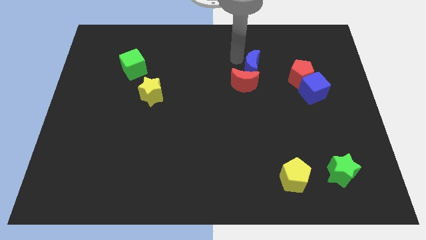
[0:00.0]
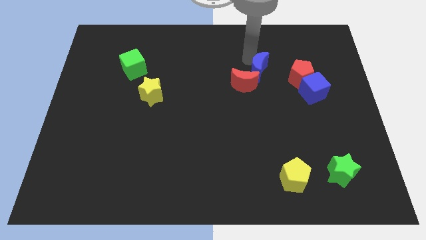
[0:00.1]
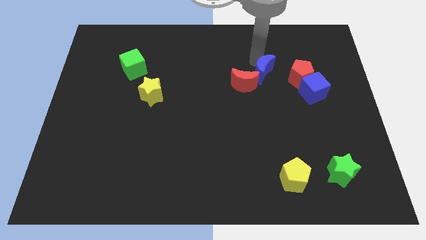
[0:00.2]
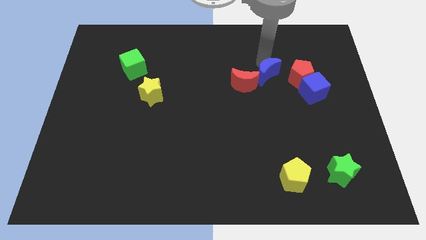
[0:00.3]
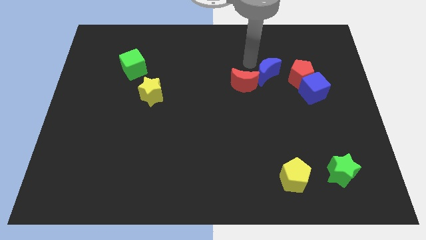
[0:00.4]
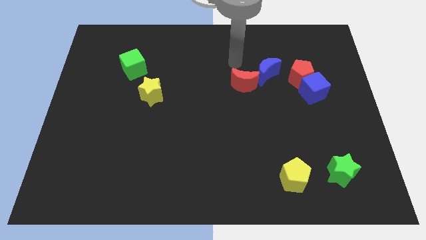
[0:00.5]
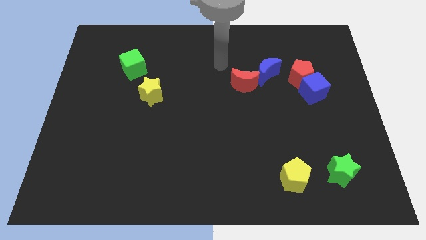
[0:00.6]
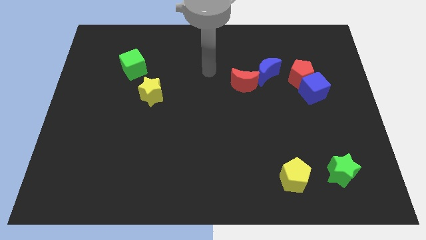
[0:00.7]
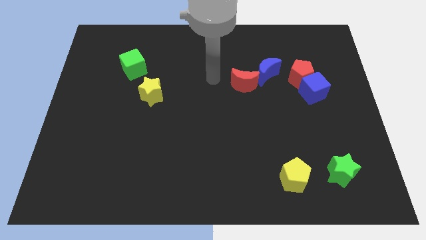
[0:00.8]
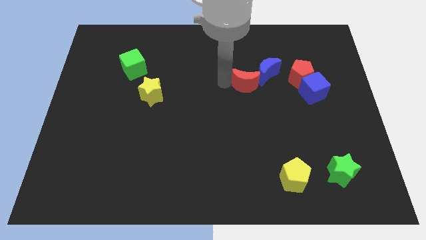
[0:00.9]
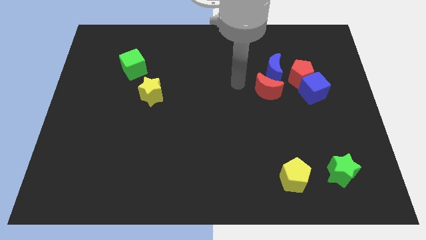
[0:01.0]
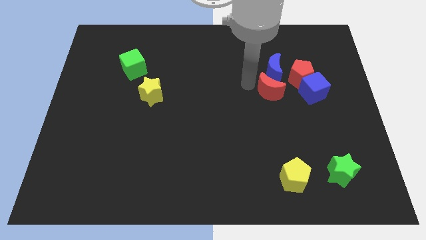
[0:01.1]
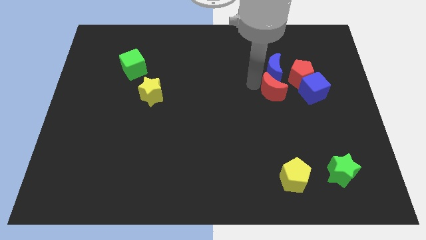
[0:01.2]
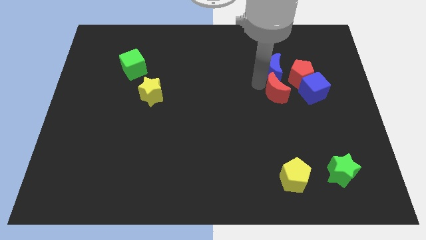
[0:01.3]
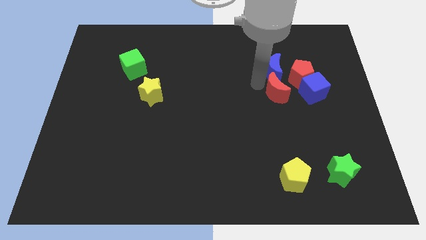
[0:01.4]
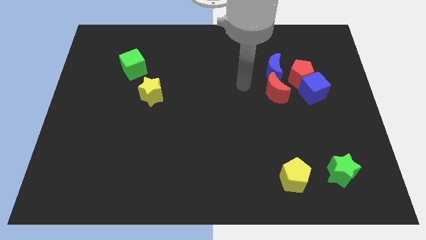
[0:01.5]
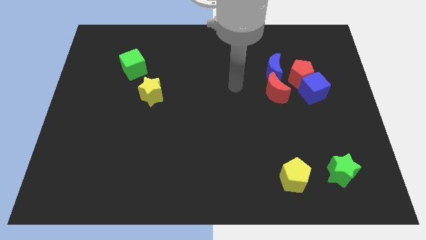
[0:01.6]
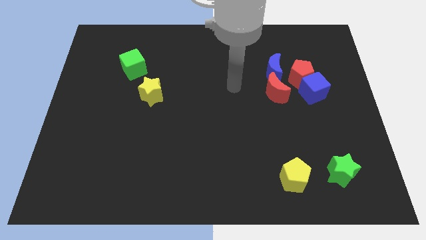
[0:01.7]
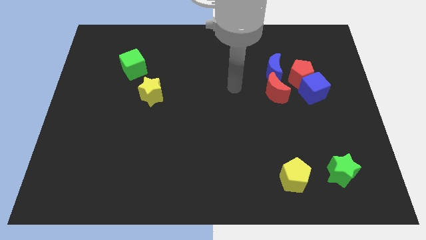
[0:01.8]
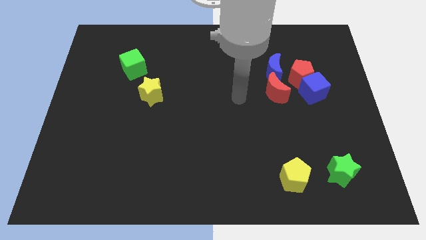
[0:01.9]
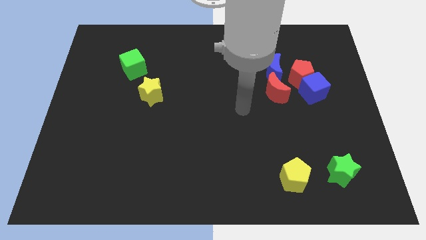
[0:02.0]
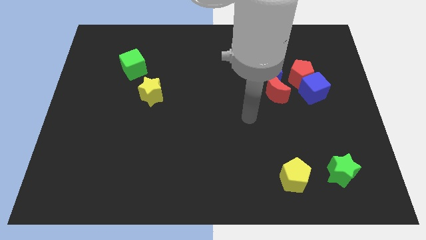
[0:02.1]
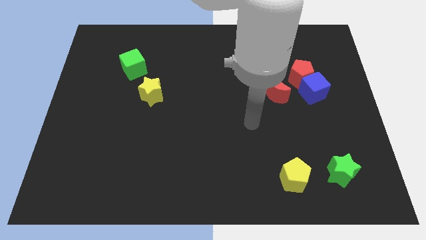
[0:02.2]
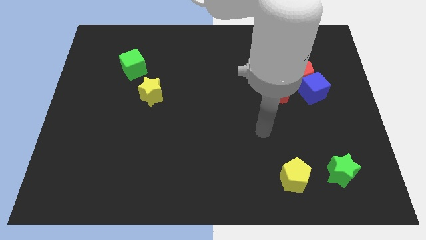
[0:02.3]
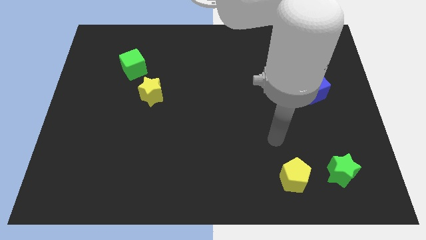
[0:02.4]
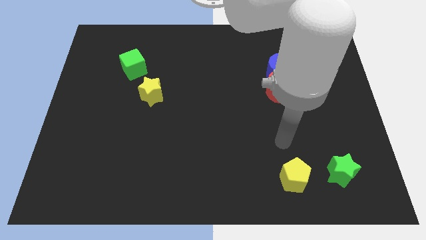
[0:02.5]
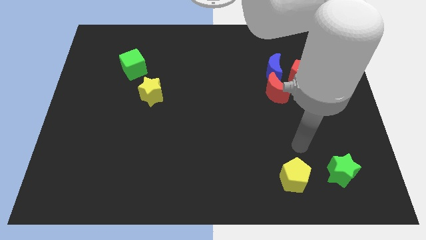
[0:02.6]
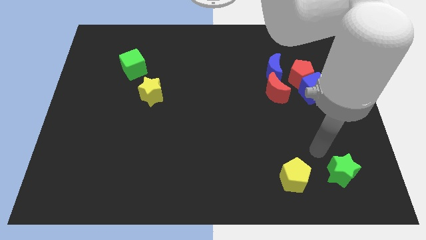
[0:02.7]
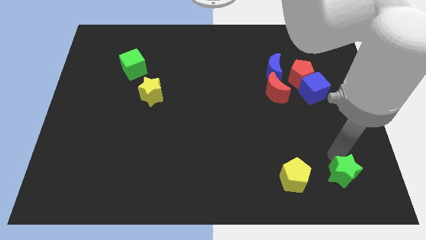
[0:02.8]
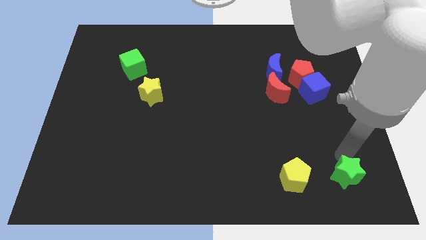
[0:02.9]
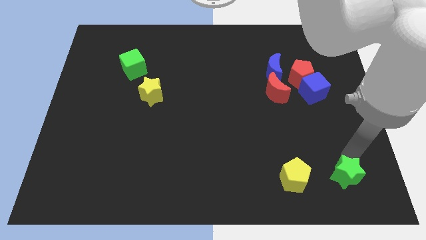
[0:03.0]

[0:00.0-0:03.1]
place the red moon and blue moon horizontal to the blue cube

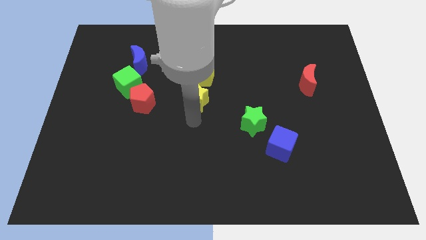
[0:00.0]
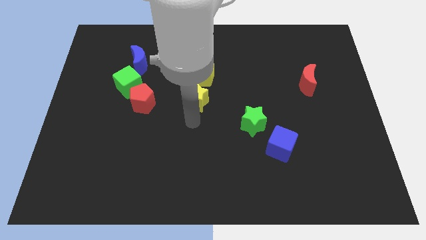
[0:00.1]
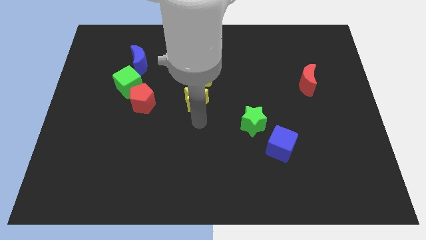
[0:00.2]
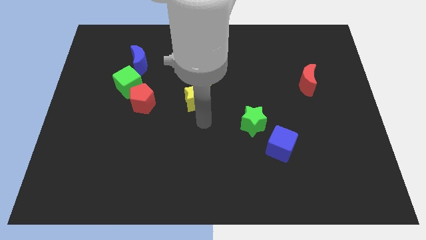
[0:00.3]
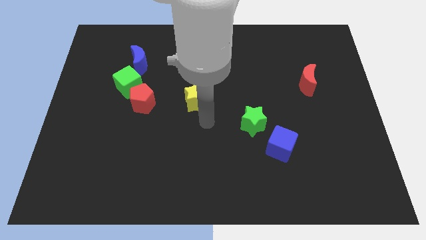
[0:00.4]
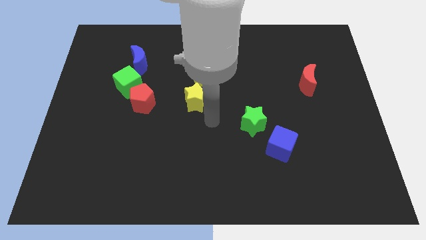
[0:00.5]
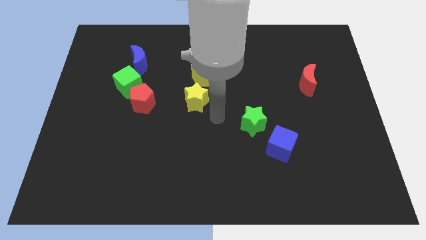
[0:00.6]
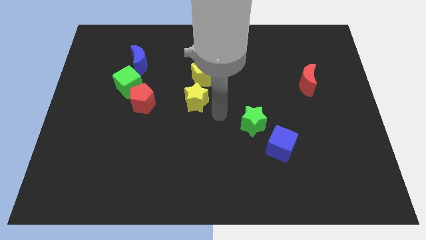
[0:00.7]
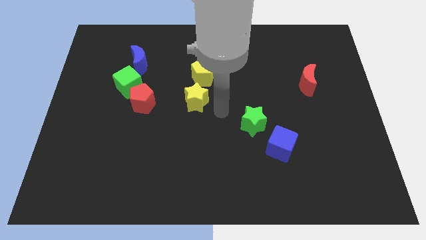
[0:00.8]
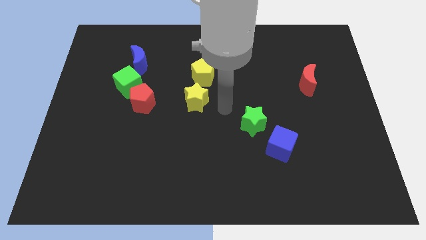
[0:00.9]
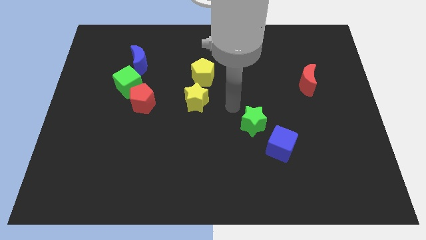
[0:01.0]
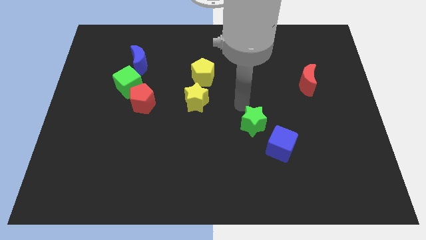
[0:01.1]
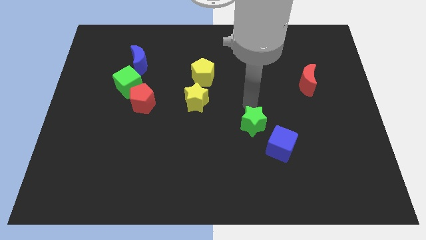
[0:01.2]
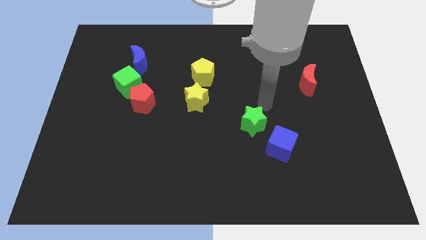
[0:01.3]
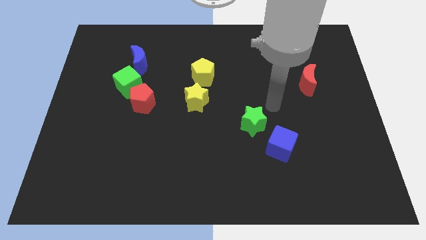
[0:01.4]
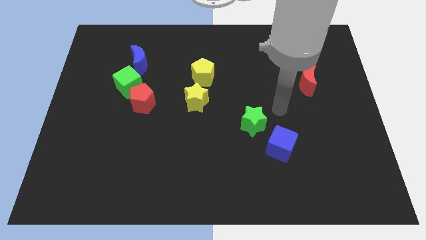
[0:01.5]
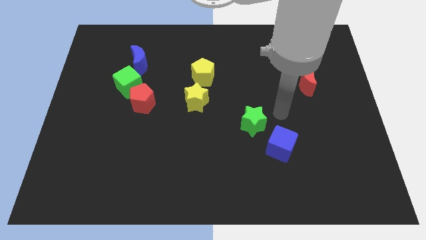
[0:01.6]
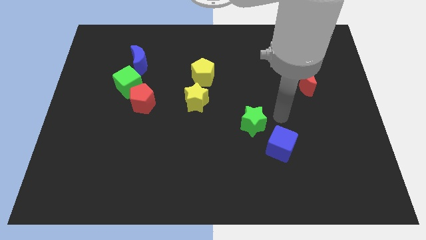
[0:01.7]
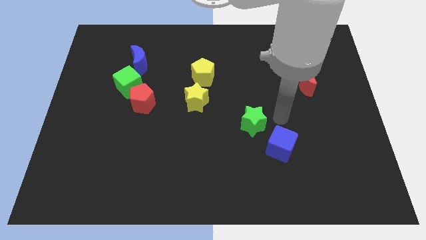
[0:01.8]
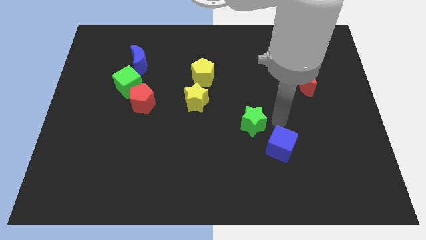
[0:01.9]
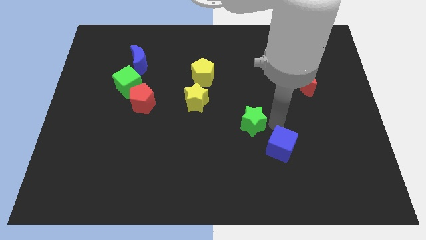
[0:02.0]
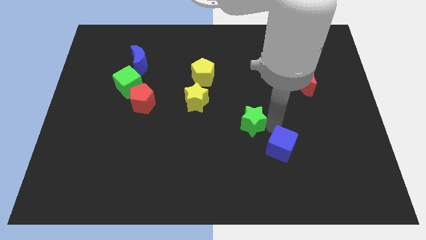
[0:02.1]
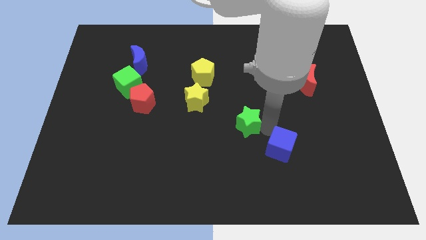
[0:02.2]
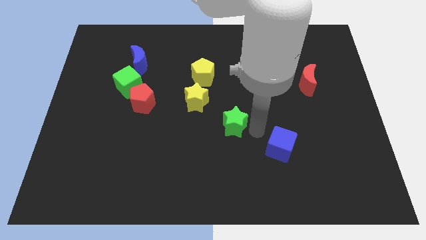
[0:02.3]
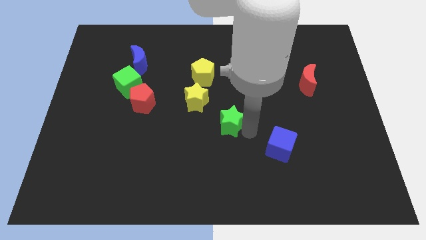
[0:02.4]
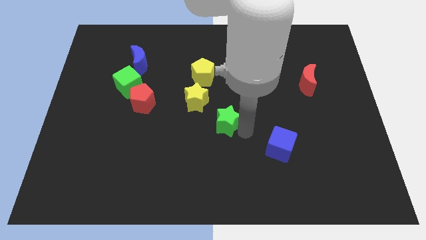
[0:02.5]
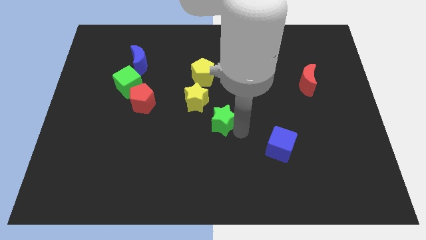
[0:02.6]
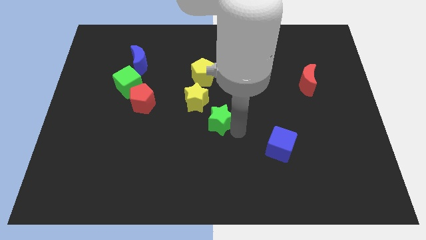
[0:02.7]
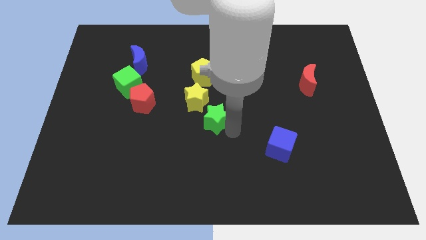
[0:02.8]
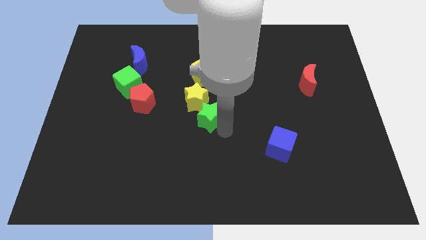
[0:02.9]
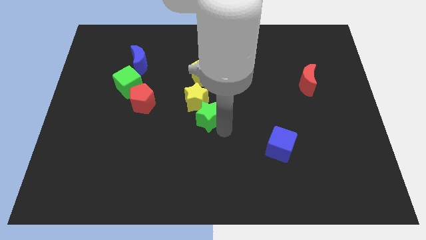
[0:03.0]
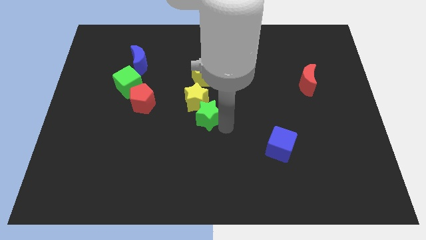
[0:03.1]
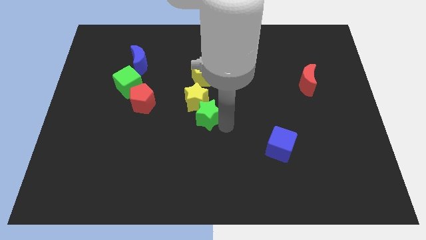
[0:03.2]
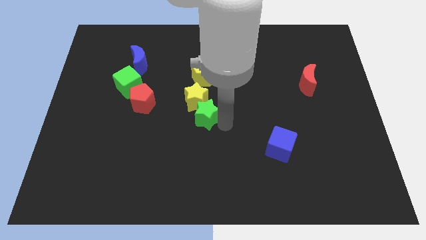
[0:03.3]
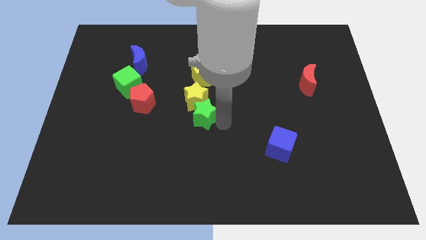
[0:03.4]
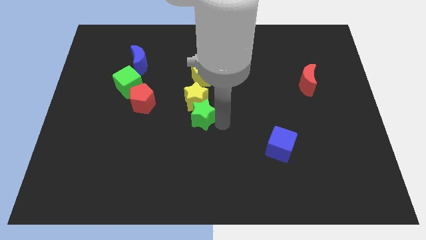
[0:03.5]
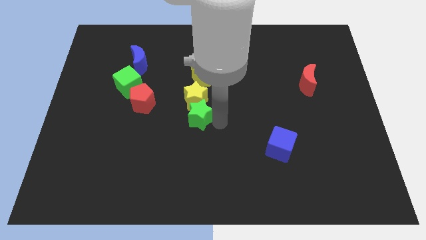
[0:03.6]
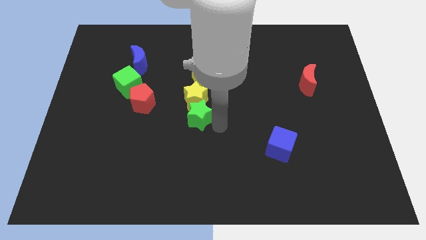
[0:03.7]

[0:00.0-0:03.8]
move the green star to the bottom of the yellow star

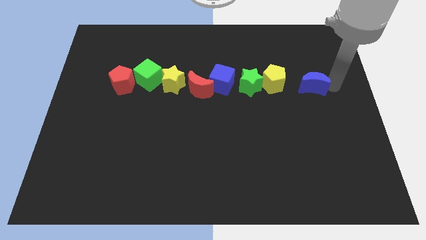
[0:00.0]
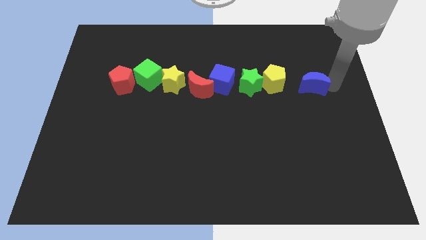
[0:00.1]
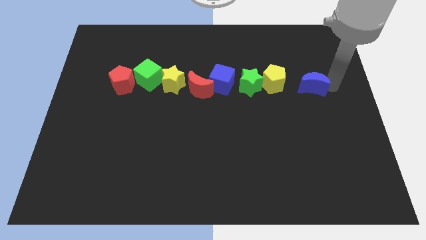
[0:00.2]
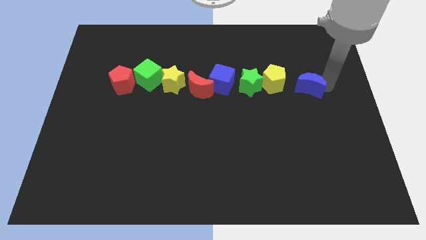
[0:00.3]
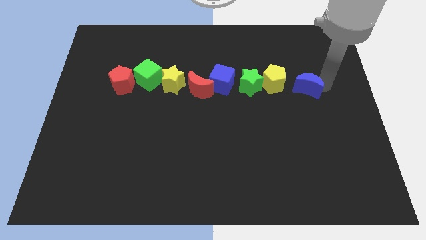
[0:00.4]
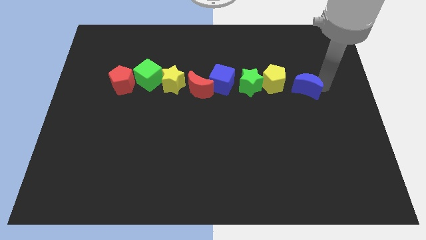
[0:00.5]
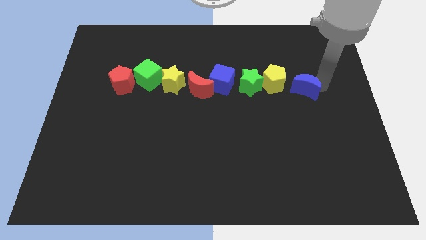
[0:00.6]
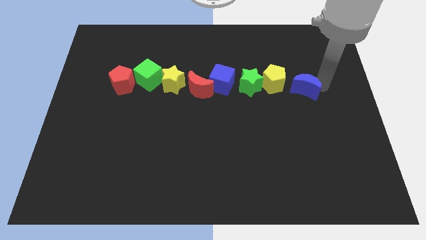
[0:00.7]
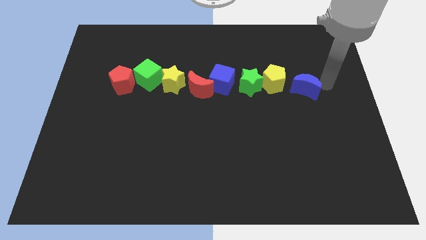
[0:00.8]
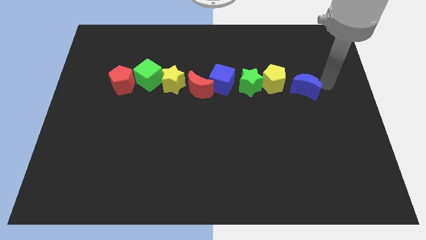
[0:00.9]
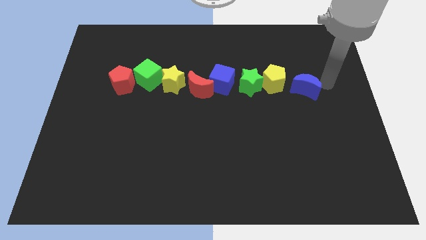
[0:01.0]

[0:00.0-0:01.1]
adjust the blue moon to form a horizontal line

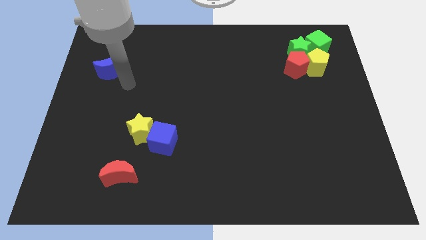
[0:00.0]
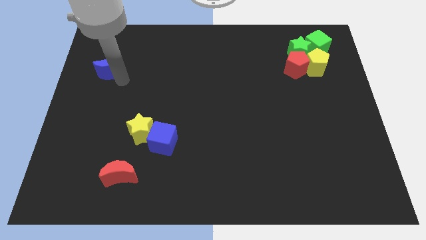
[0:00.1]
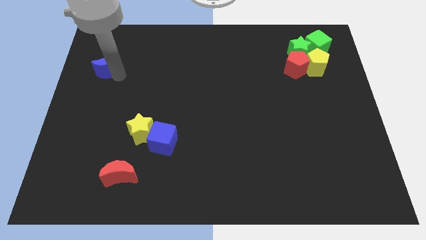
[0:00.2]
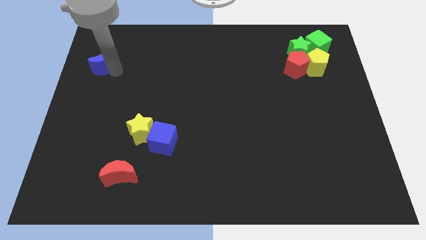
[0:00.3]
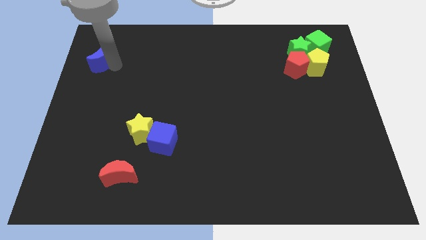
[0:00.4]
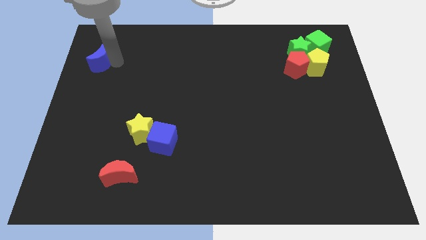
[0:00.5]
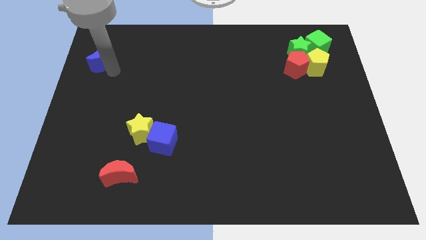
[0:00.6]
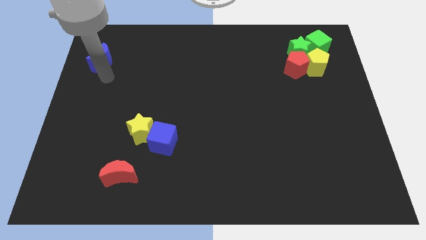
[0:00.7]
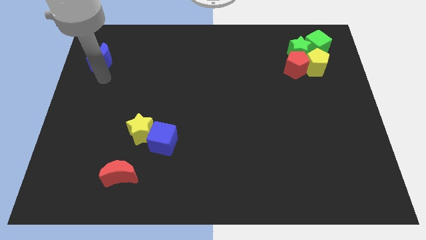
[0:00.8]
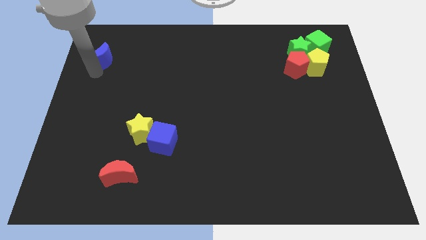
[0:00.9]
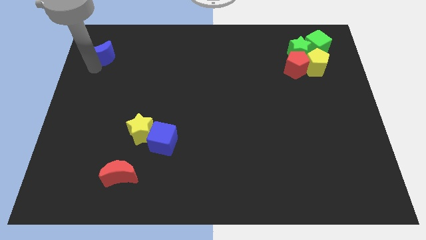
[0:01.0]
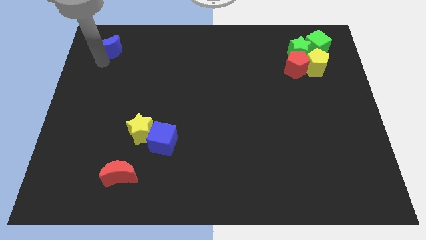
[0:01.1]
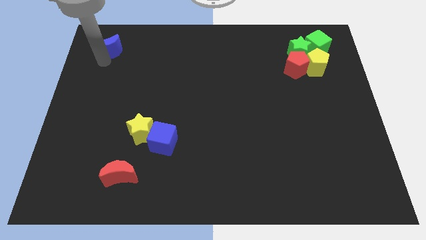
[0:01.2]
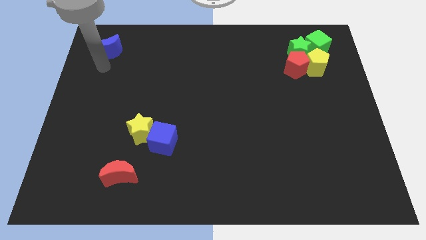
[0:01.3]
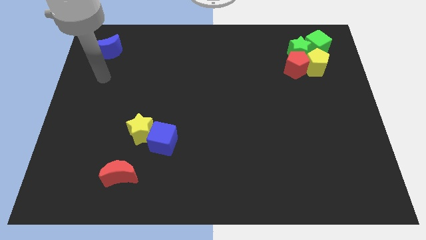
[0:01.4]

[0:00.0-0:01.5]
push the blue crescent top left to the board
